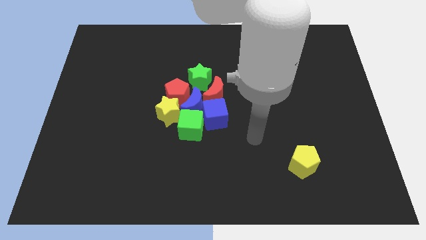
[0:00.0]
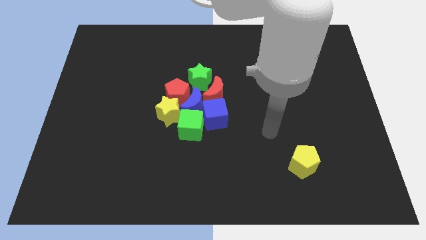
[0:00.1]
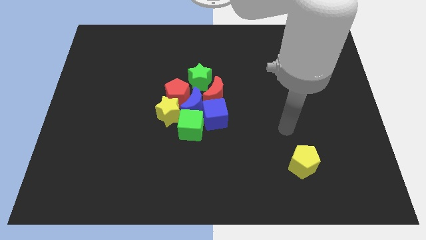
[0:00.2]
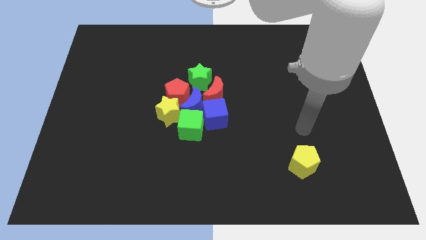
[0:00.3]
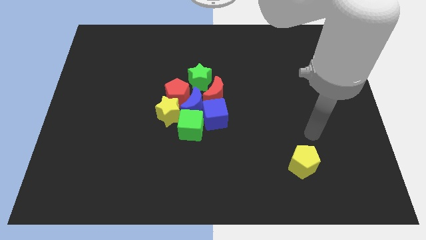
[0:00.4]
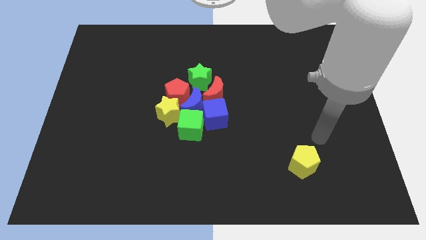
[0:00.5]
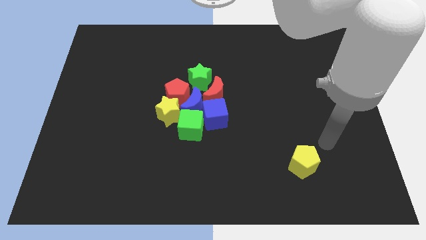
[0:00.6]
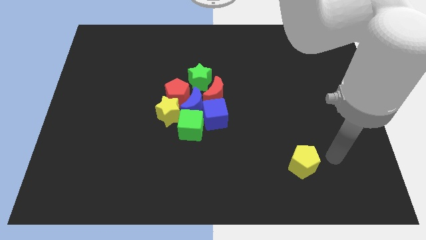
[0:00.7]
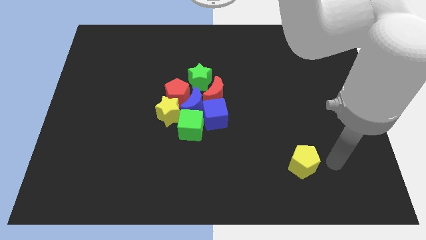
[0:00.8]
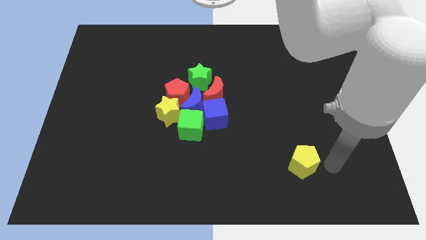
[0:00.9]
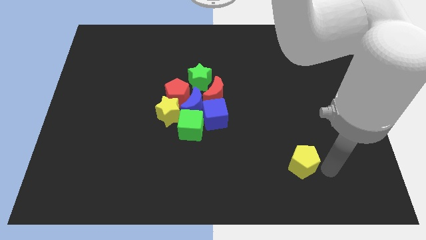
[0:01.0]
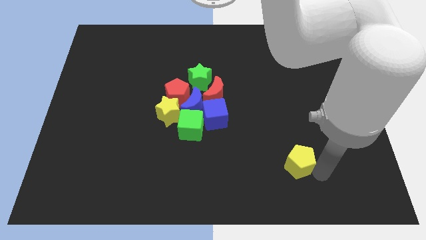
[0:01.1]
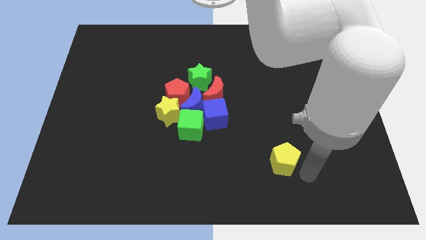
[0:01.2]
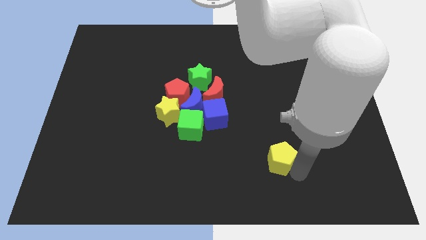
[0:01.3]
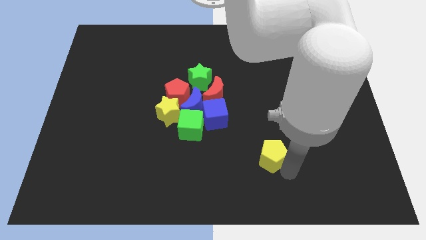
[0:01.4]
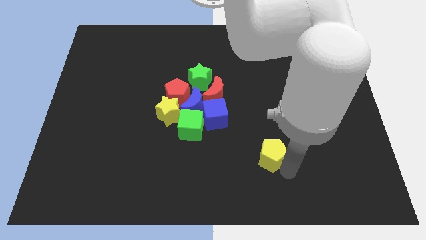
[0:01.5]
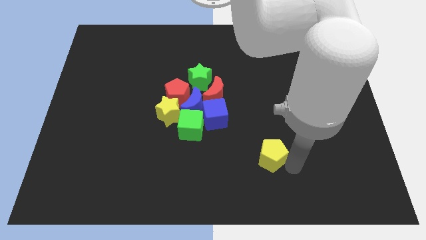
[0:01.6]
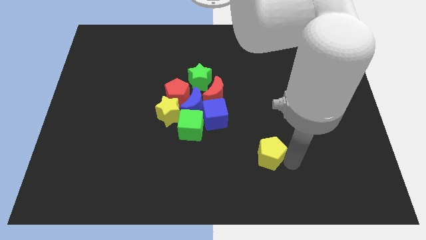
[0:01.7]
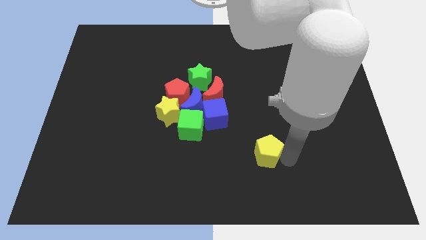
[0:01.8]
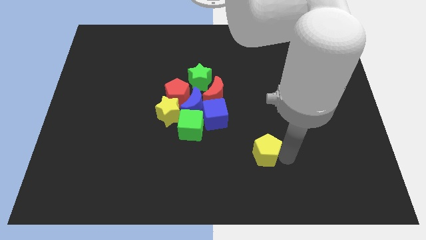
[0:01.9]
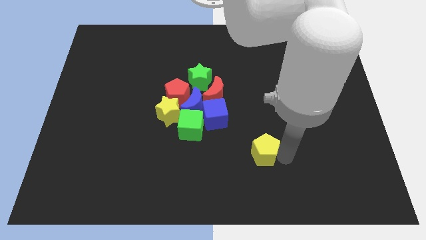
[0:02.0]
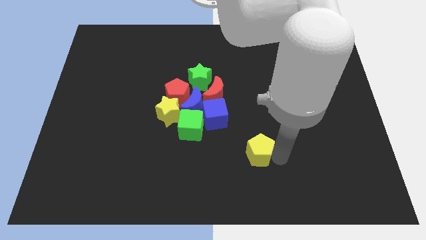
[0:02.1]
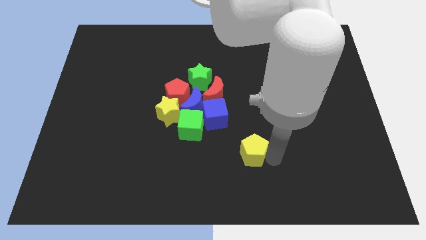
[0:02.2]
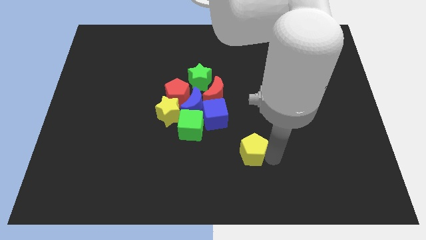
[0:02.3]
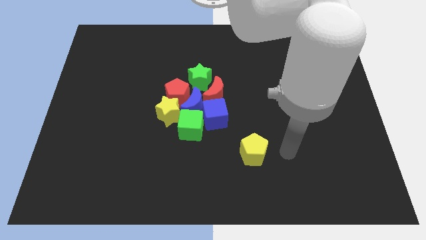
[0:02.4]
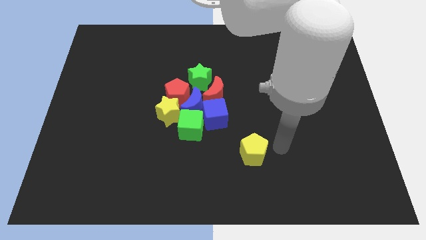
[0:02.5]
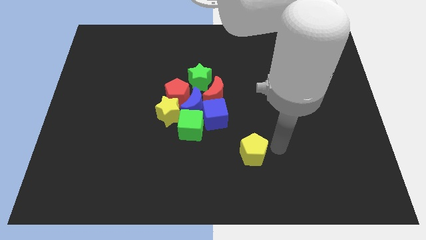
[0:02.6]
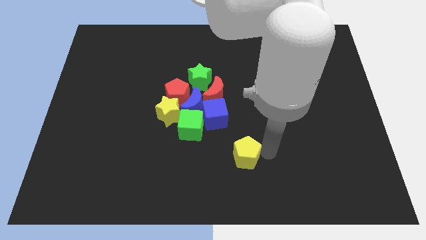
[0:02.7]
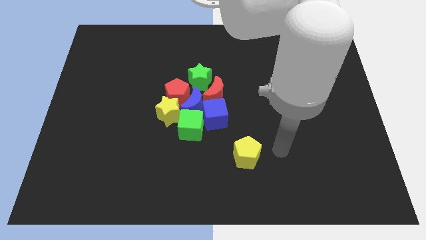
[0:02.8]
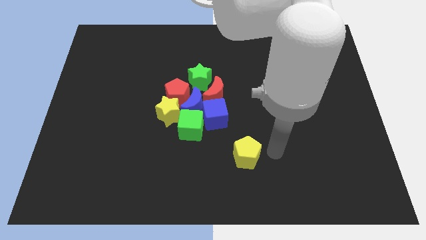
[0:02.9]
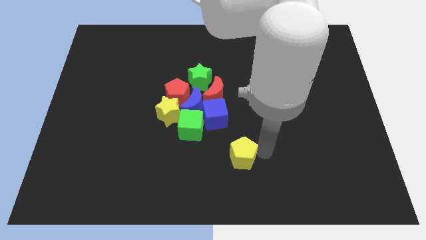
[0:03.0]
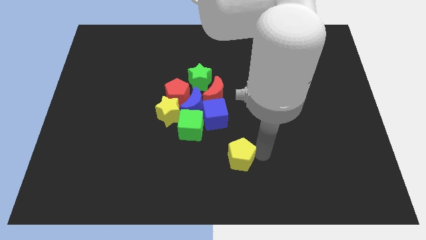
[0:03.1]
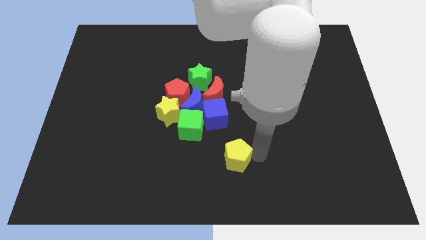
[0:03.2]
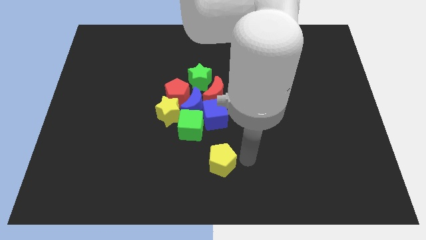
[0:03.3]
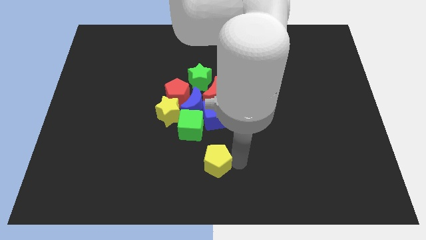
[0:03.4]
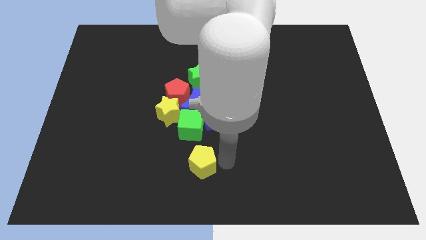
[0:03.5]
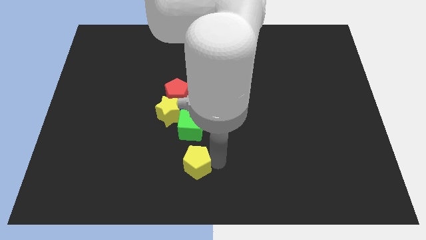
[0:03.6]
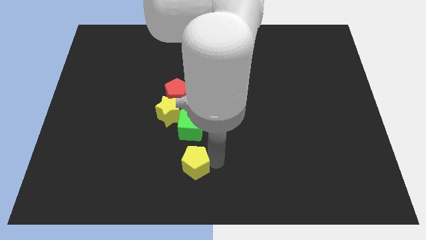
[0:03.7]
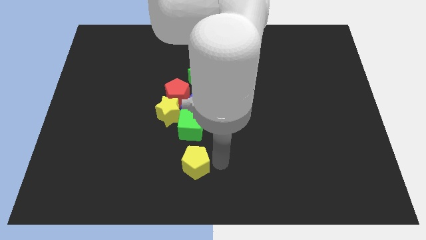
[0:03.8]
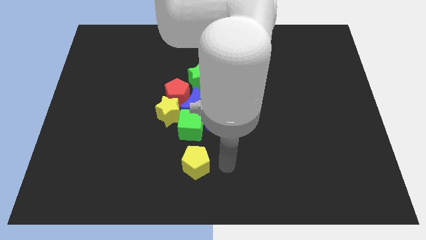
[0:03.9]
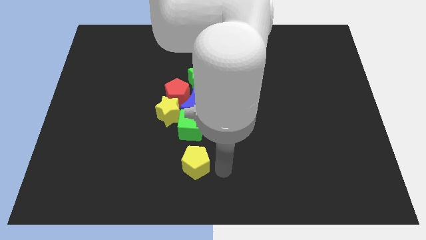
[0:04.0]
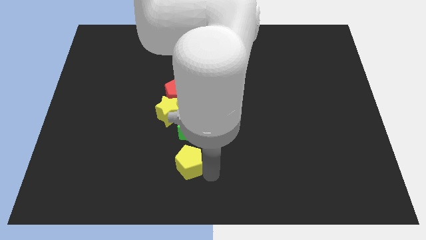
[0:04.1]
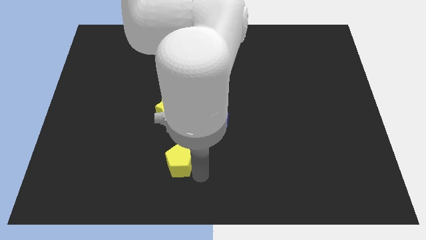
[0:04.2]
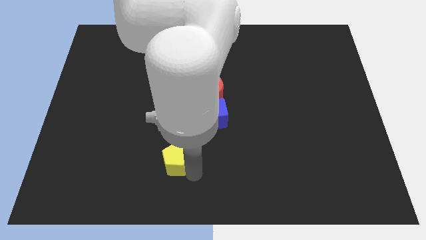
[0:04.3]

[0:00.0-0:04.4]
move the yellow pentagon below the green cube

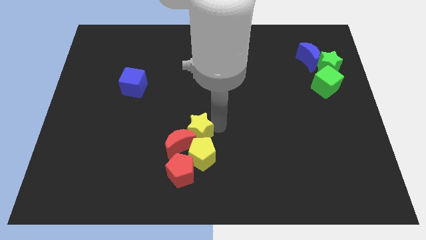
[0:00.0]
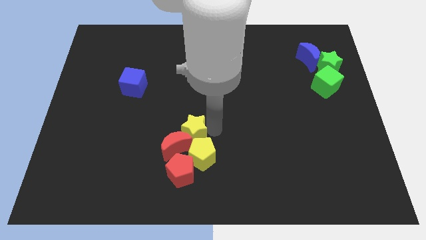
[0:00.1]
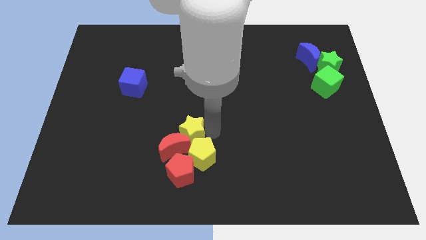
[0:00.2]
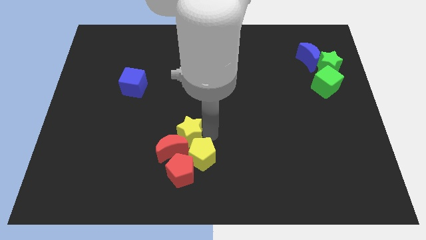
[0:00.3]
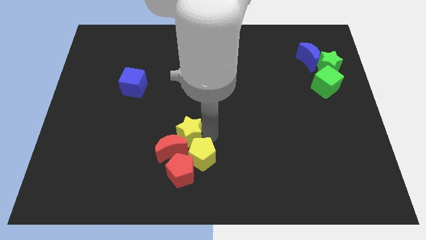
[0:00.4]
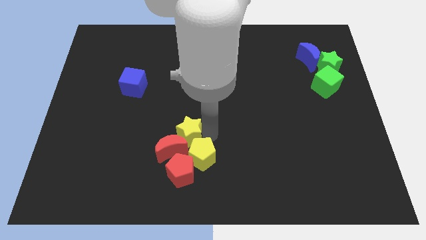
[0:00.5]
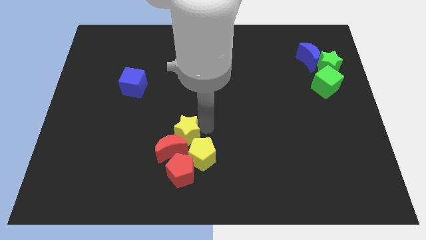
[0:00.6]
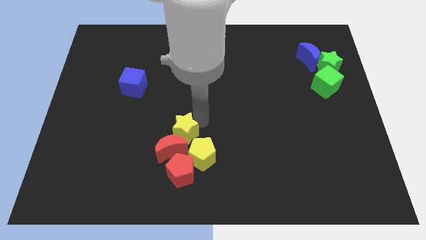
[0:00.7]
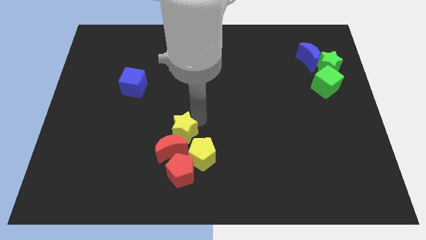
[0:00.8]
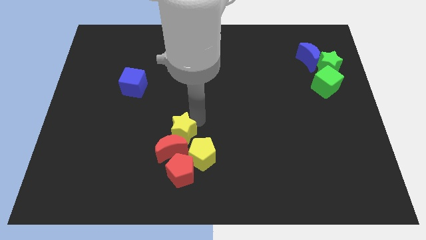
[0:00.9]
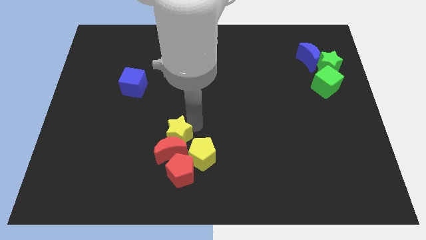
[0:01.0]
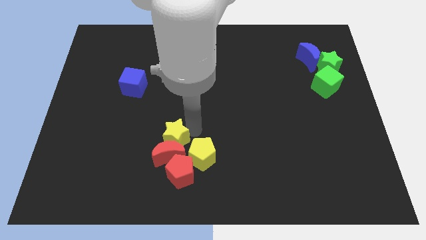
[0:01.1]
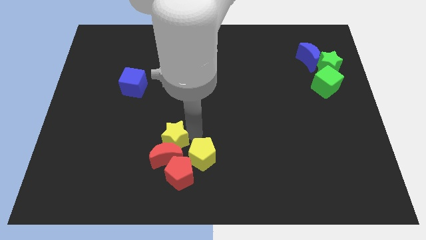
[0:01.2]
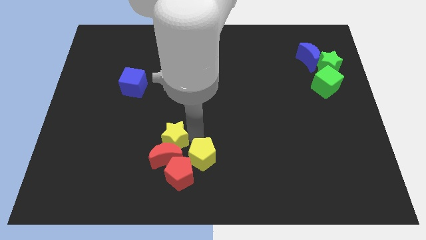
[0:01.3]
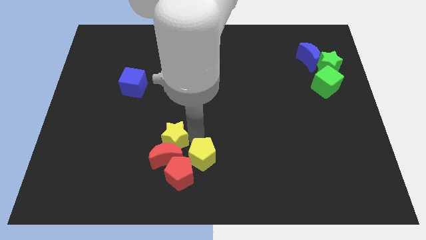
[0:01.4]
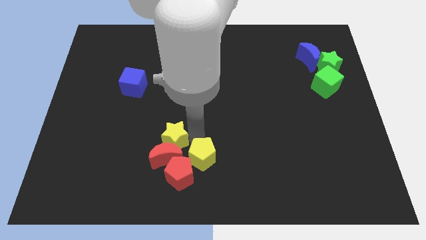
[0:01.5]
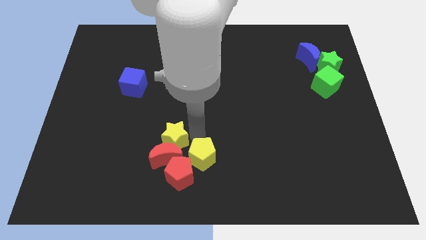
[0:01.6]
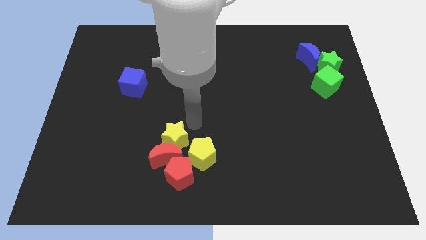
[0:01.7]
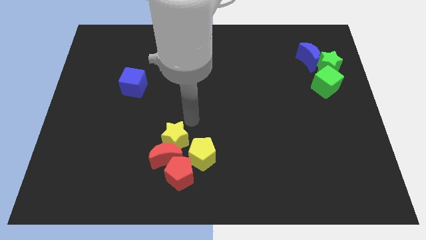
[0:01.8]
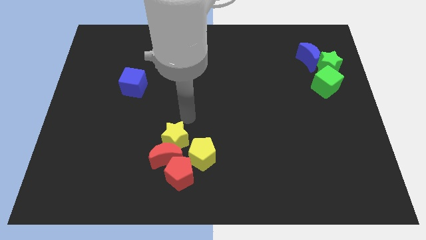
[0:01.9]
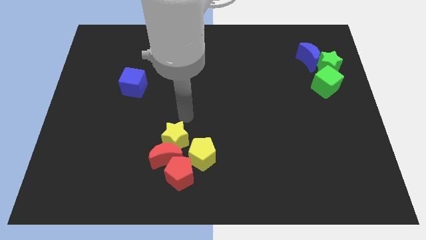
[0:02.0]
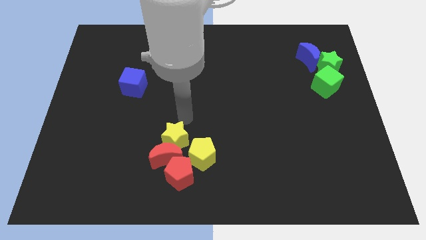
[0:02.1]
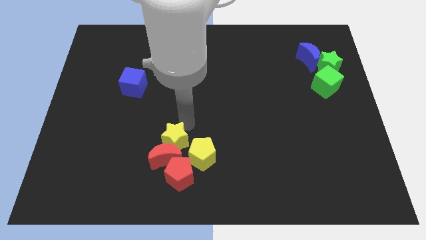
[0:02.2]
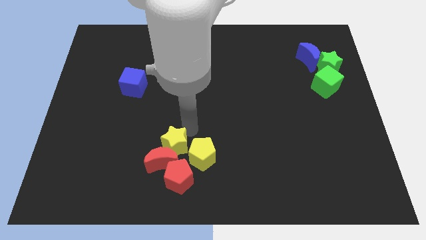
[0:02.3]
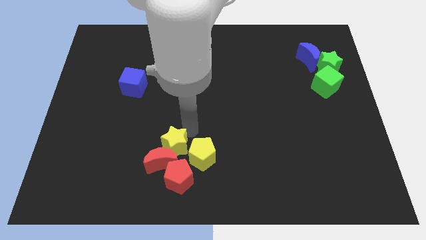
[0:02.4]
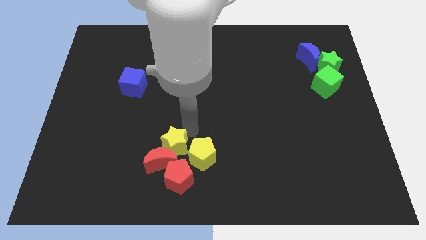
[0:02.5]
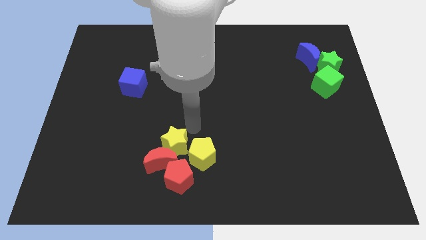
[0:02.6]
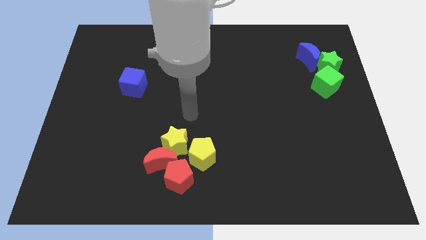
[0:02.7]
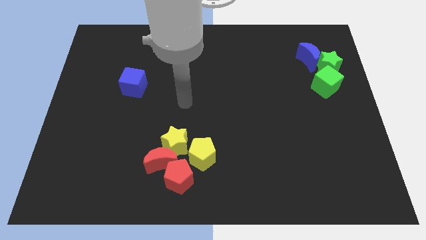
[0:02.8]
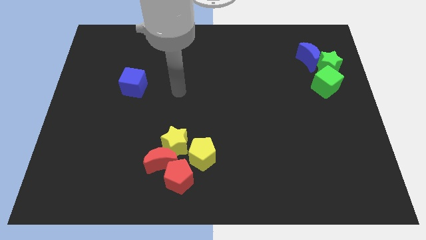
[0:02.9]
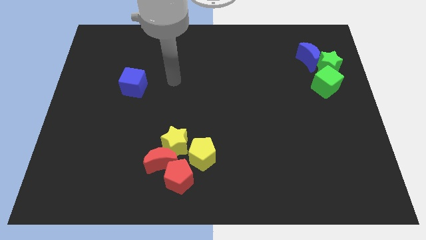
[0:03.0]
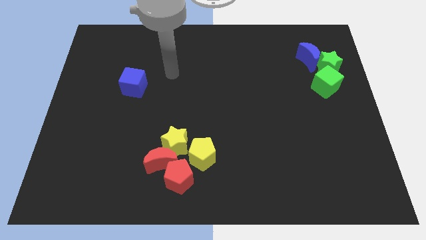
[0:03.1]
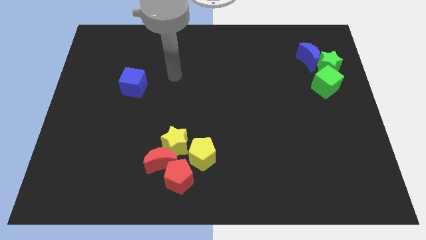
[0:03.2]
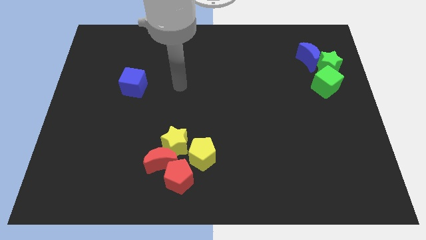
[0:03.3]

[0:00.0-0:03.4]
push yellow star into the red crescent

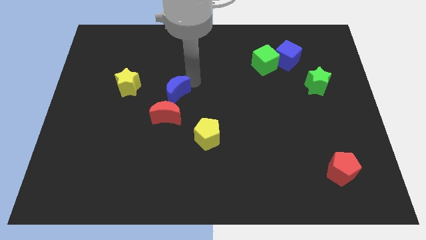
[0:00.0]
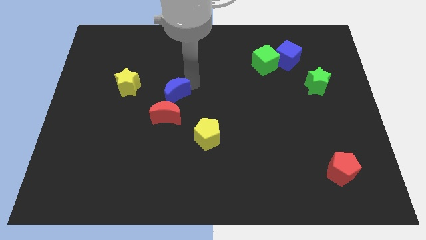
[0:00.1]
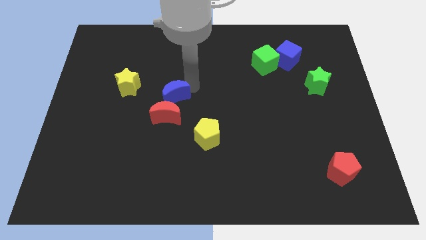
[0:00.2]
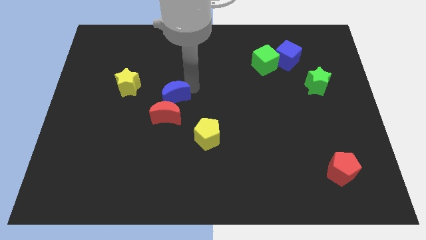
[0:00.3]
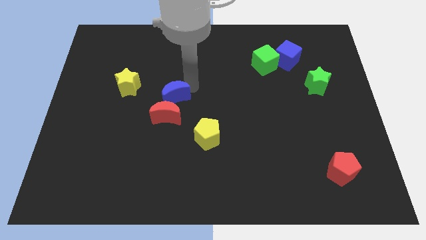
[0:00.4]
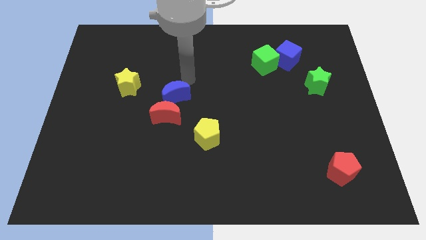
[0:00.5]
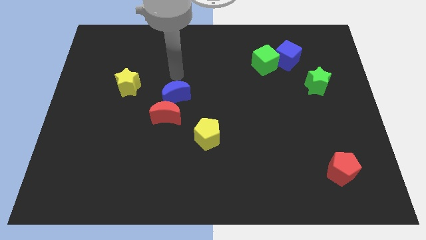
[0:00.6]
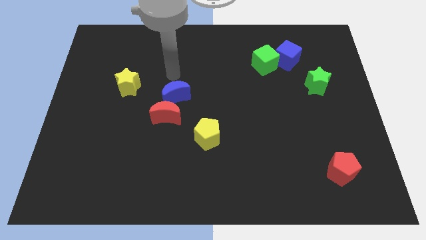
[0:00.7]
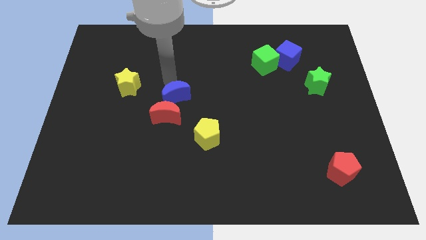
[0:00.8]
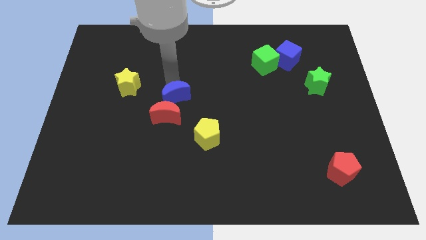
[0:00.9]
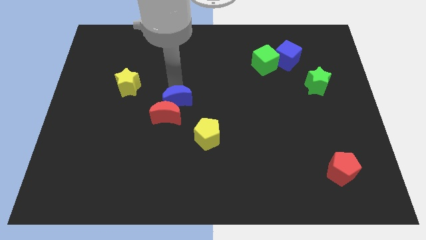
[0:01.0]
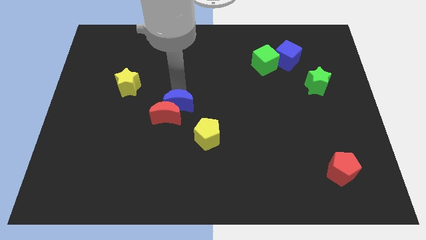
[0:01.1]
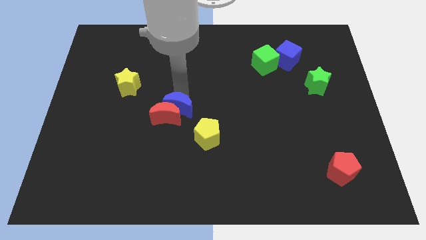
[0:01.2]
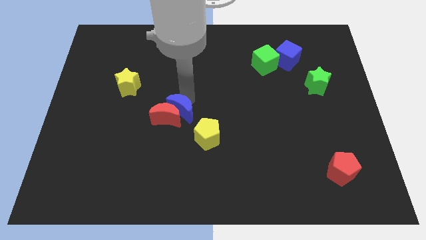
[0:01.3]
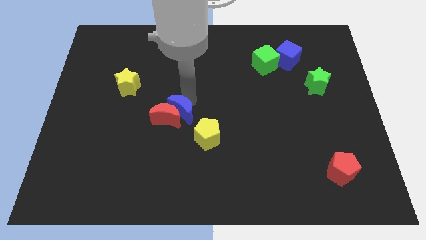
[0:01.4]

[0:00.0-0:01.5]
move blue moon into the red moon
